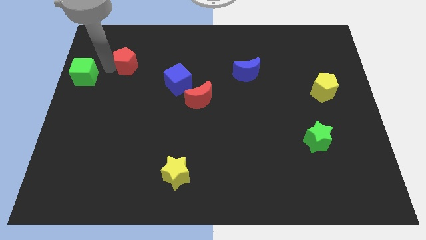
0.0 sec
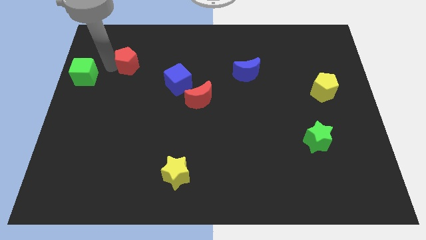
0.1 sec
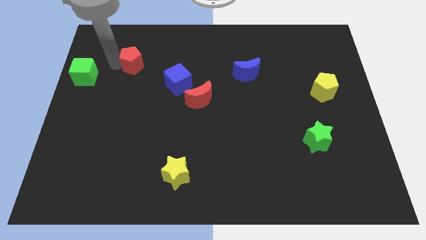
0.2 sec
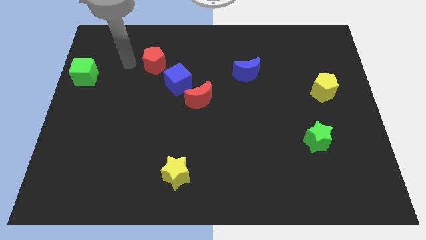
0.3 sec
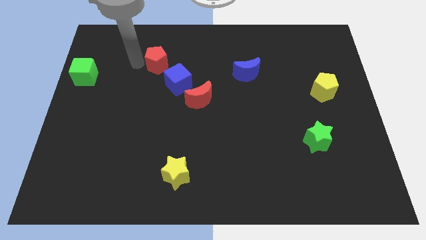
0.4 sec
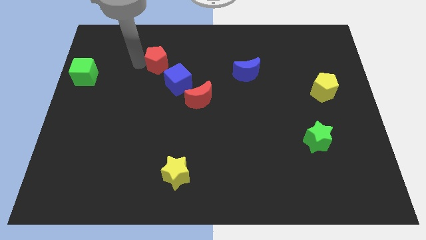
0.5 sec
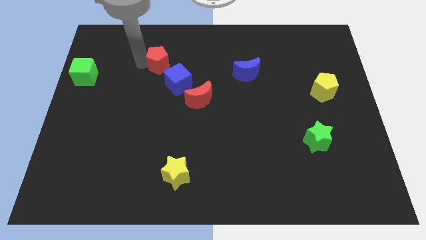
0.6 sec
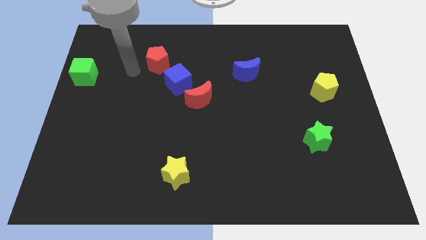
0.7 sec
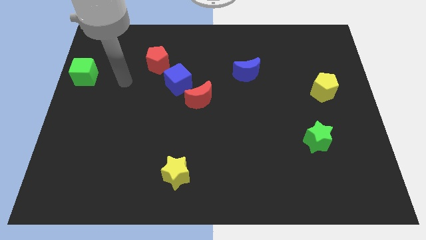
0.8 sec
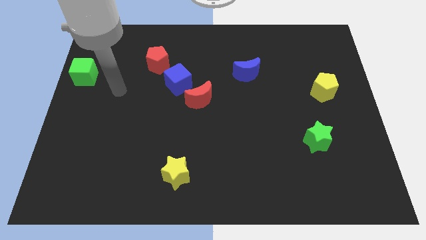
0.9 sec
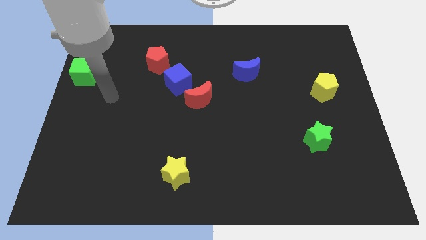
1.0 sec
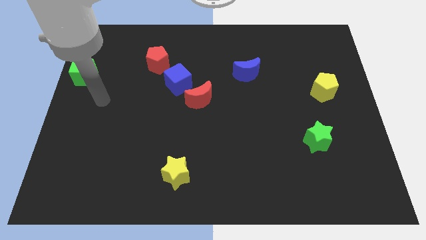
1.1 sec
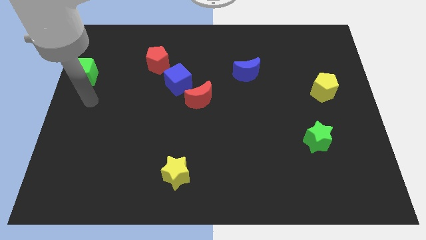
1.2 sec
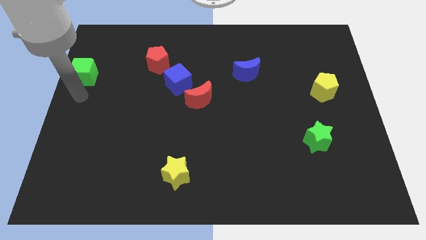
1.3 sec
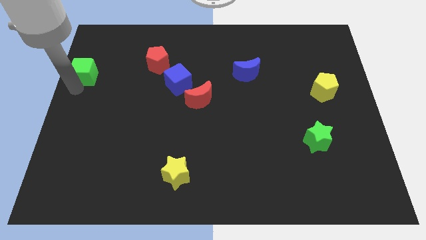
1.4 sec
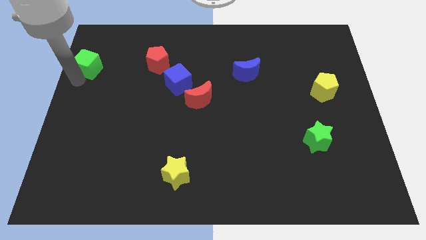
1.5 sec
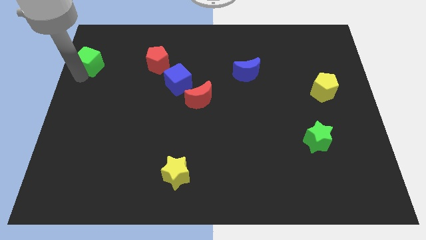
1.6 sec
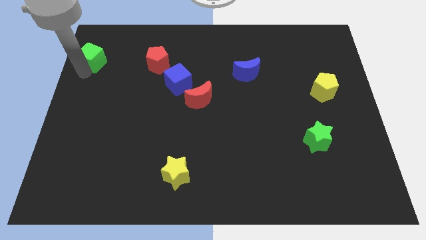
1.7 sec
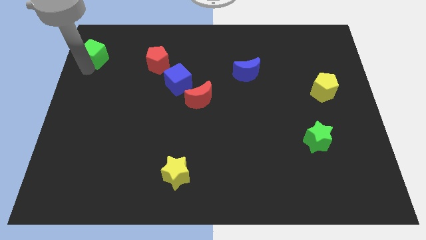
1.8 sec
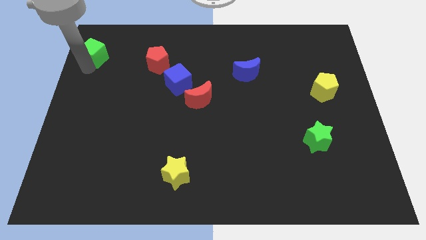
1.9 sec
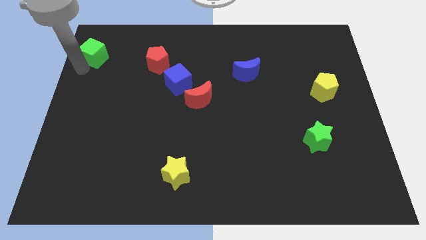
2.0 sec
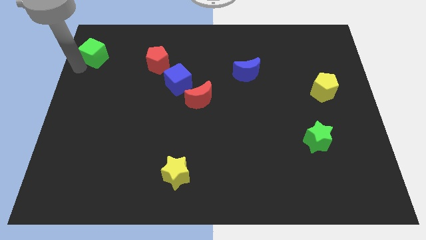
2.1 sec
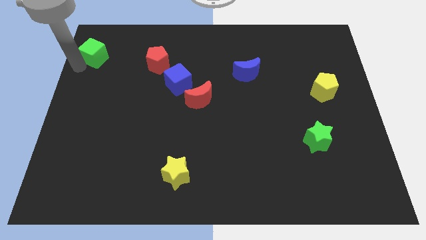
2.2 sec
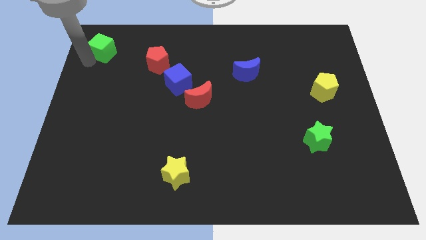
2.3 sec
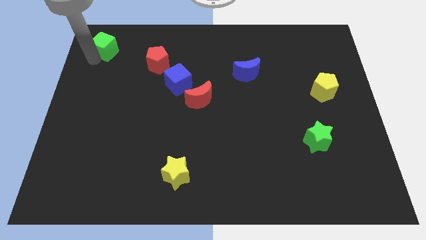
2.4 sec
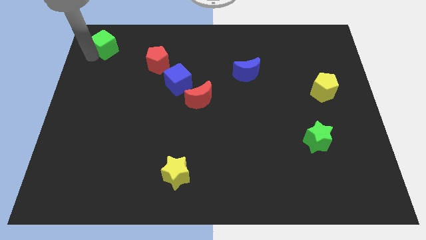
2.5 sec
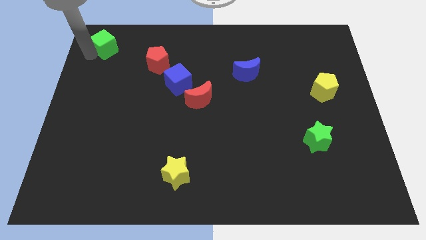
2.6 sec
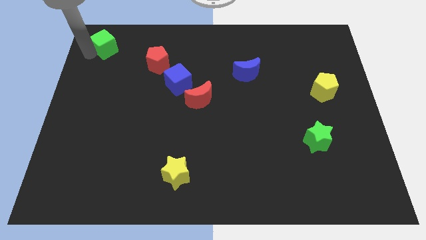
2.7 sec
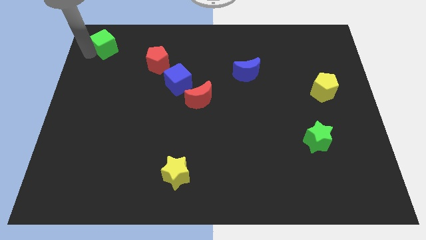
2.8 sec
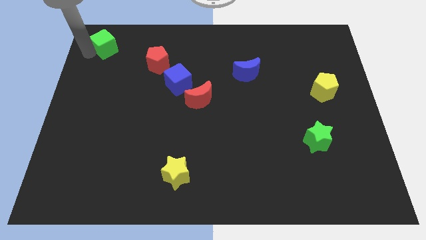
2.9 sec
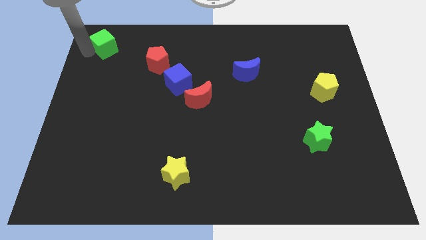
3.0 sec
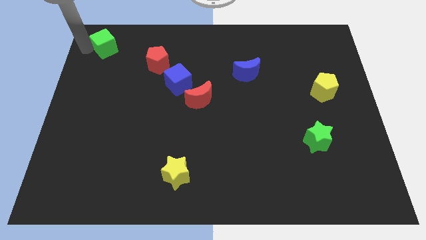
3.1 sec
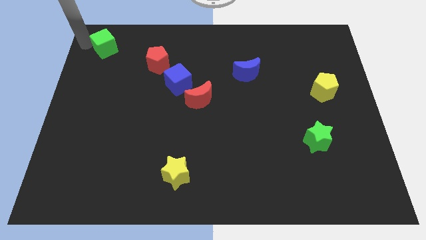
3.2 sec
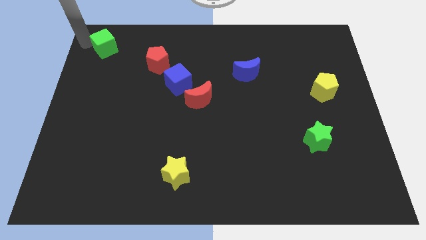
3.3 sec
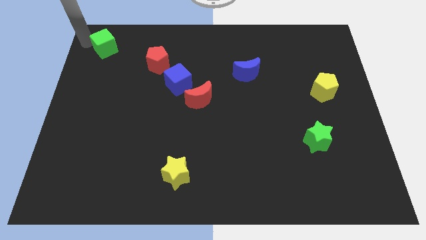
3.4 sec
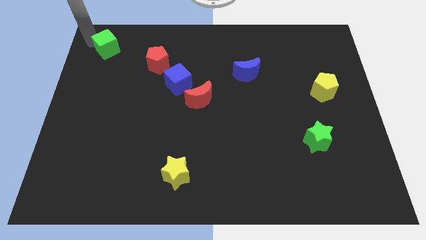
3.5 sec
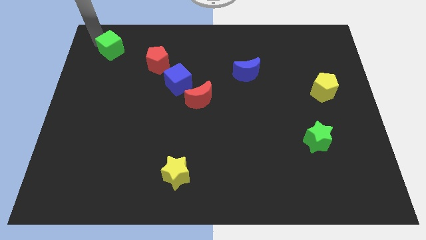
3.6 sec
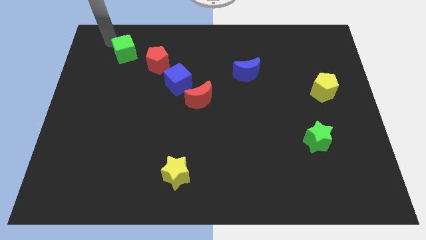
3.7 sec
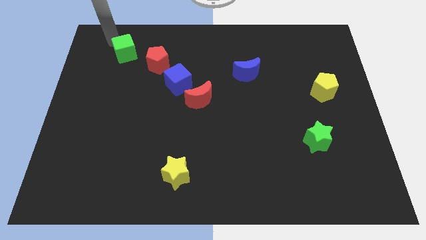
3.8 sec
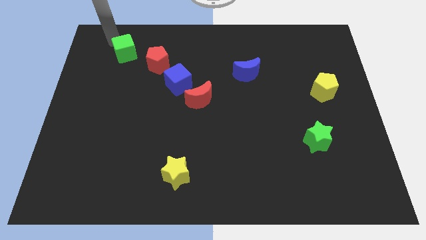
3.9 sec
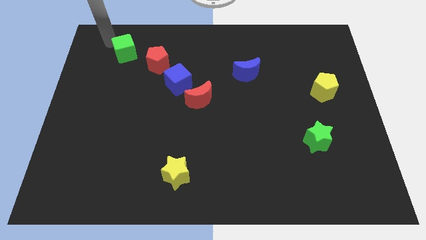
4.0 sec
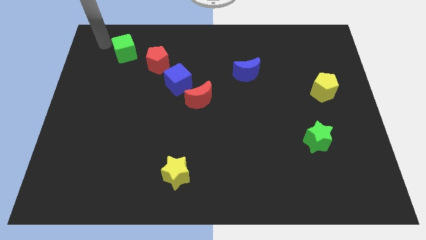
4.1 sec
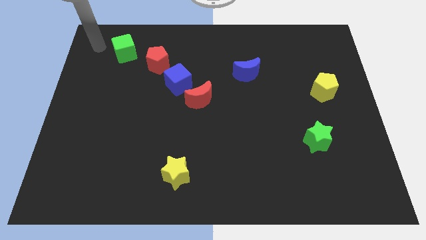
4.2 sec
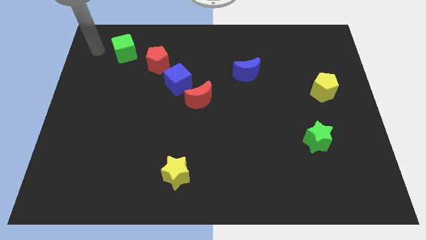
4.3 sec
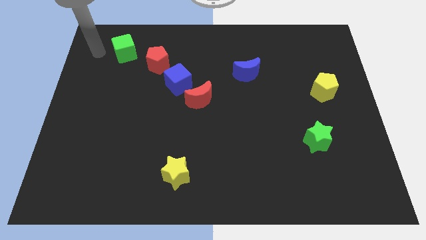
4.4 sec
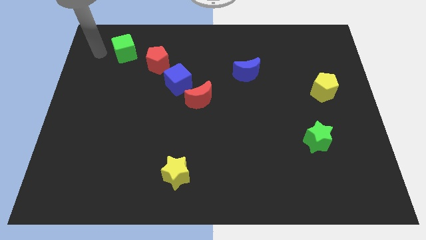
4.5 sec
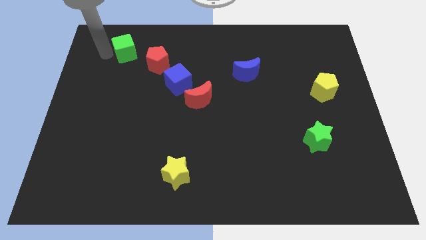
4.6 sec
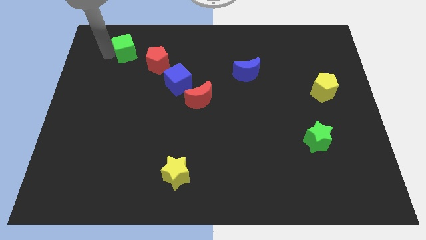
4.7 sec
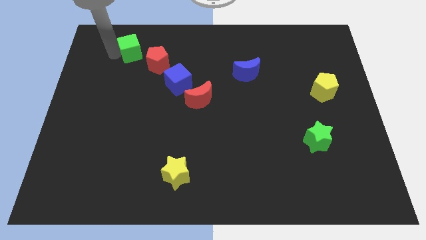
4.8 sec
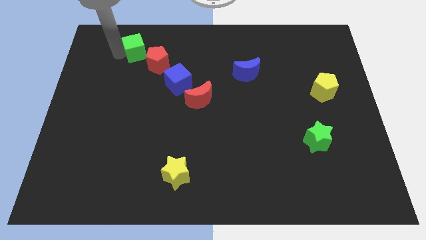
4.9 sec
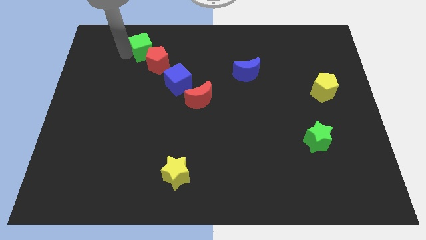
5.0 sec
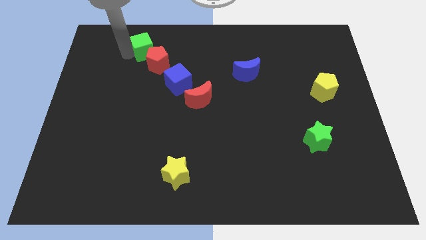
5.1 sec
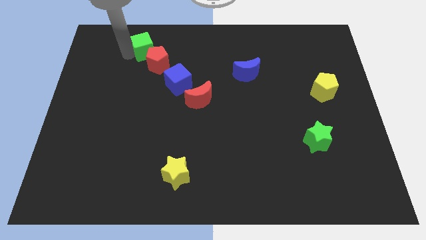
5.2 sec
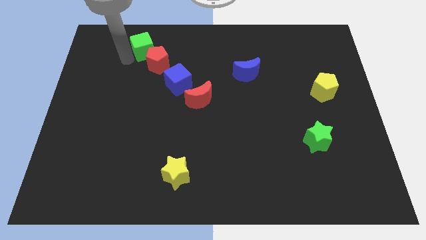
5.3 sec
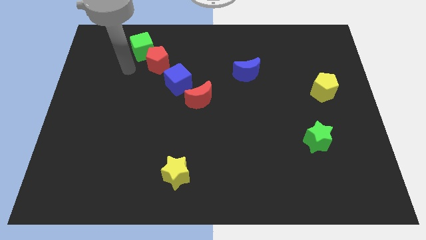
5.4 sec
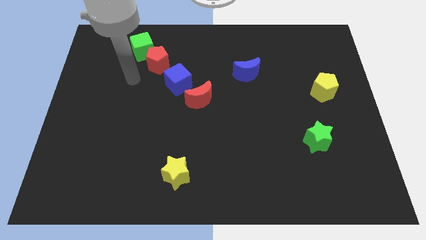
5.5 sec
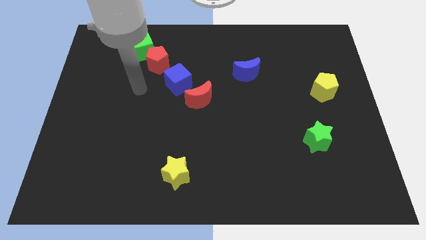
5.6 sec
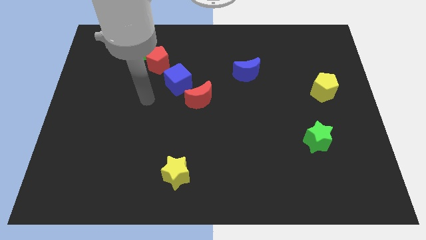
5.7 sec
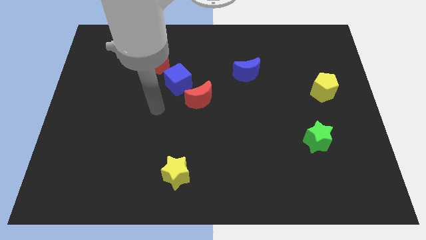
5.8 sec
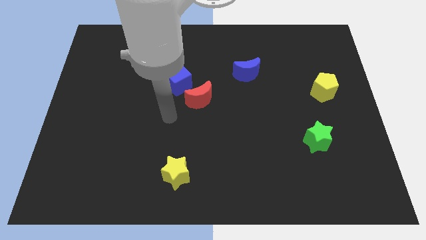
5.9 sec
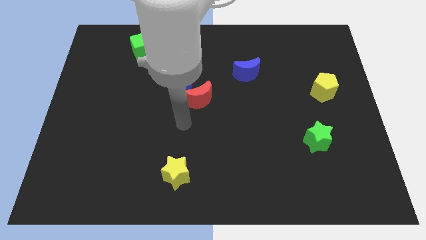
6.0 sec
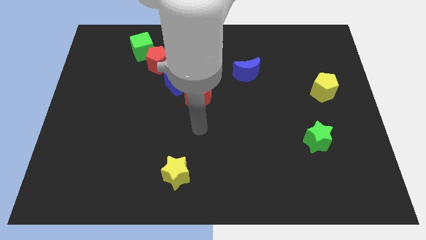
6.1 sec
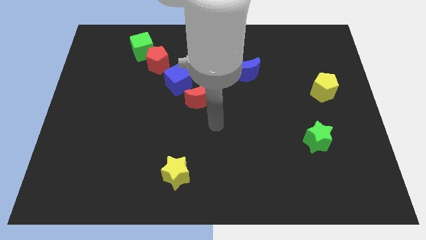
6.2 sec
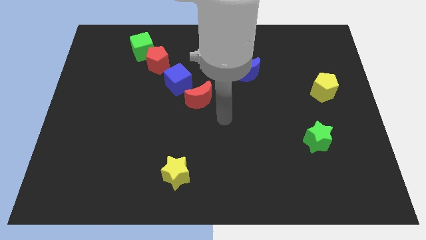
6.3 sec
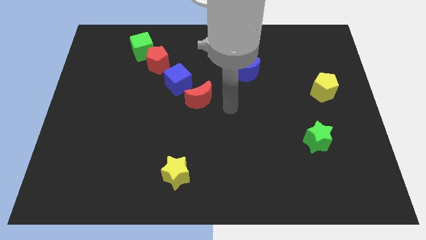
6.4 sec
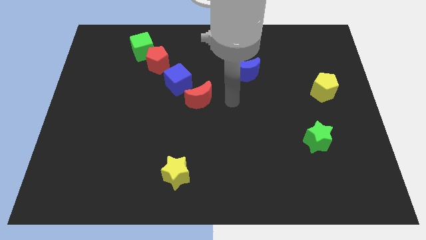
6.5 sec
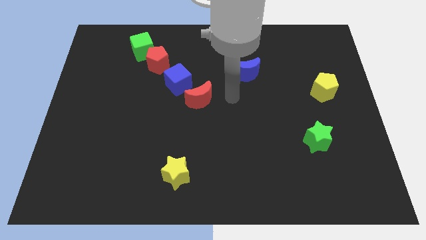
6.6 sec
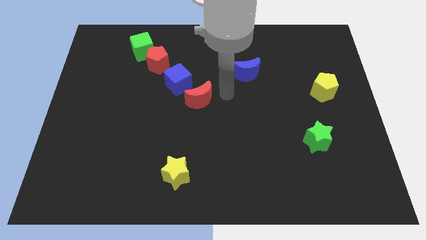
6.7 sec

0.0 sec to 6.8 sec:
place your arm in between the red crescent and the blue crescent

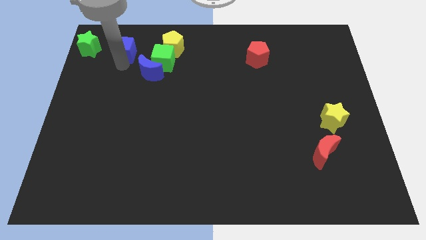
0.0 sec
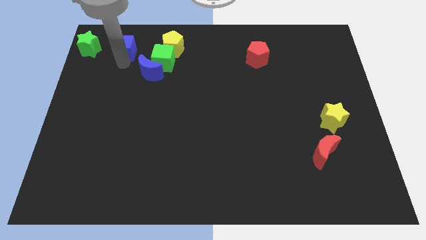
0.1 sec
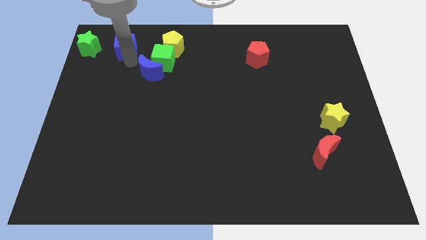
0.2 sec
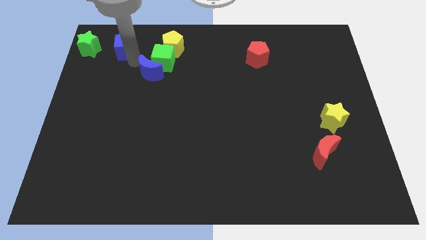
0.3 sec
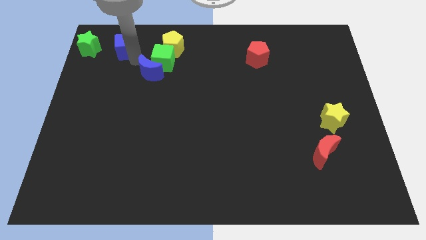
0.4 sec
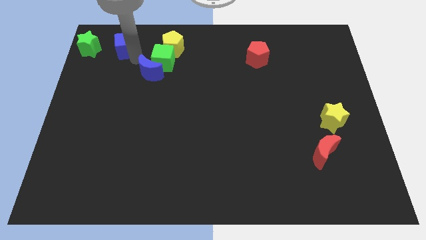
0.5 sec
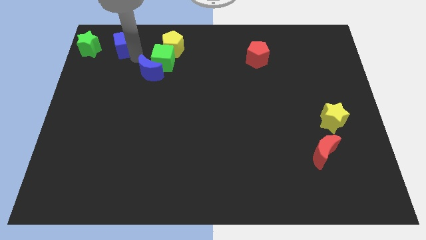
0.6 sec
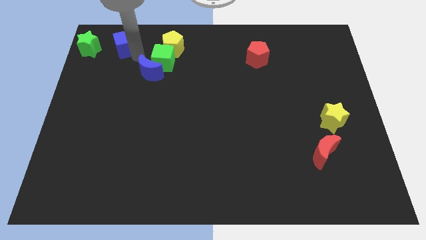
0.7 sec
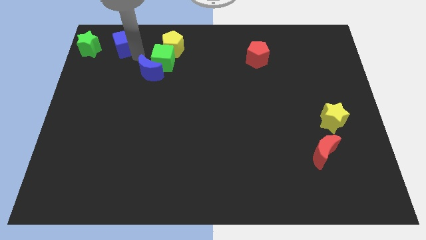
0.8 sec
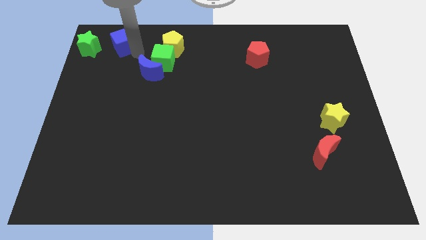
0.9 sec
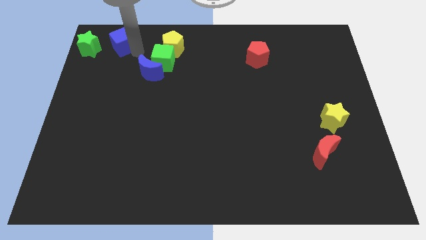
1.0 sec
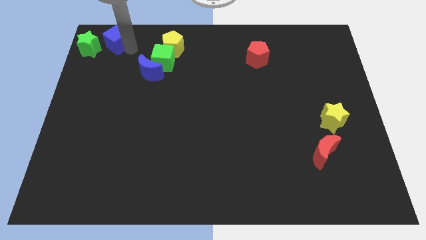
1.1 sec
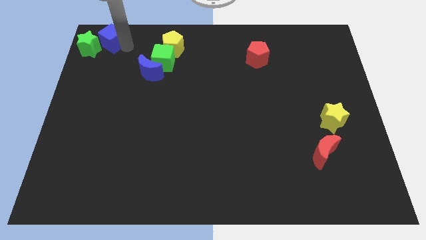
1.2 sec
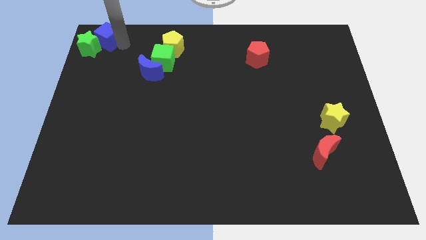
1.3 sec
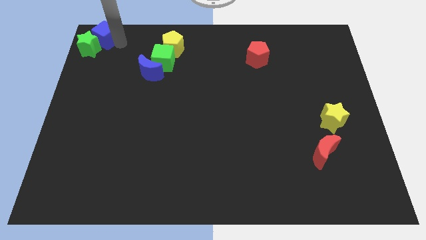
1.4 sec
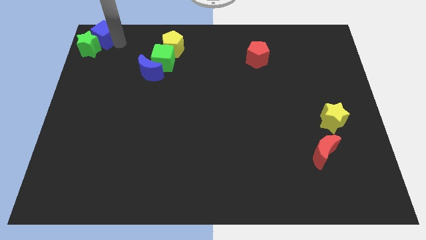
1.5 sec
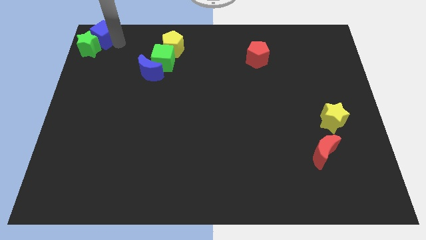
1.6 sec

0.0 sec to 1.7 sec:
place blue cube to the left corner of the board

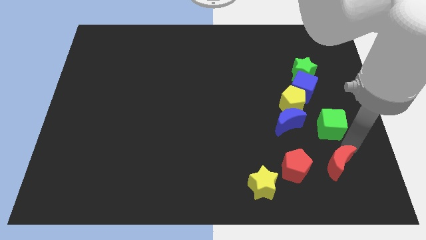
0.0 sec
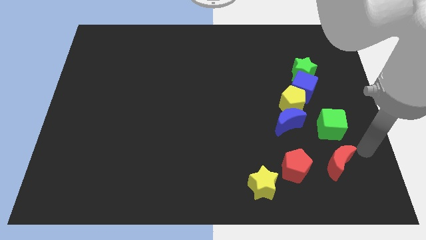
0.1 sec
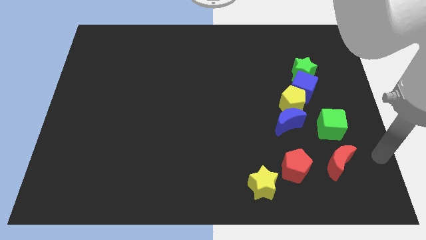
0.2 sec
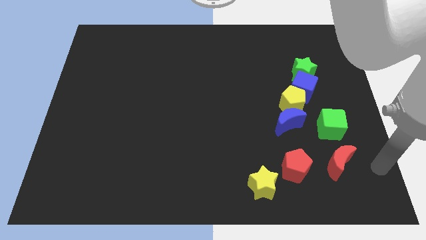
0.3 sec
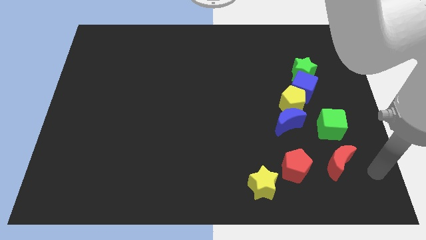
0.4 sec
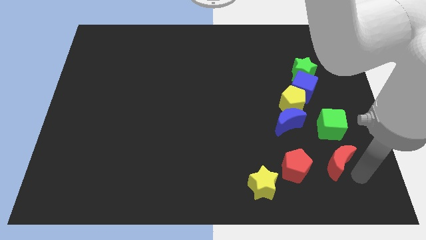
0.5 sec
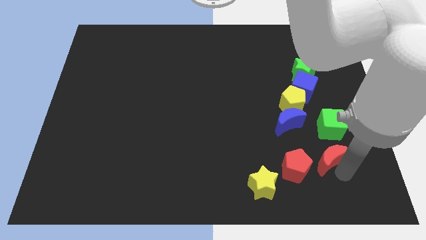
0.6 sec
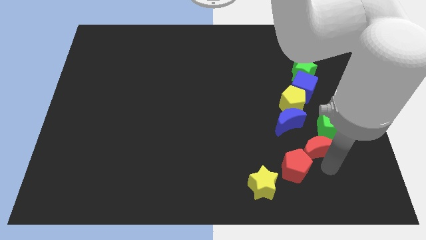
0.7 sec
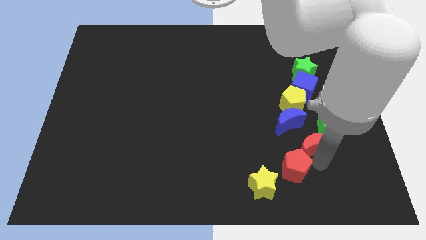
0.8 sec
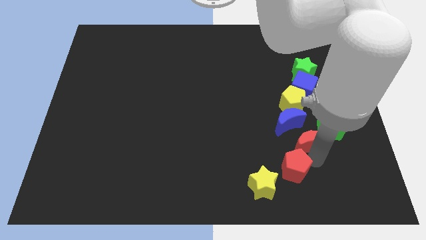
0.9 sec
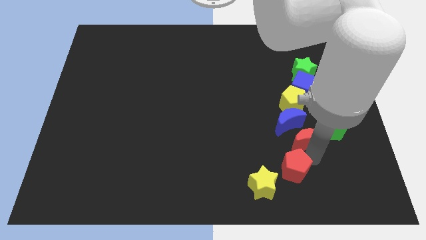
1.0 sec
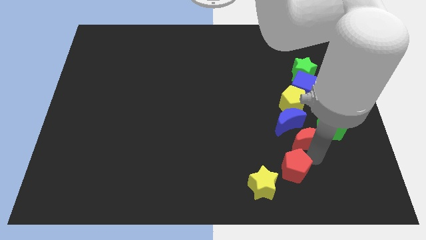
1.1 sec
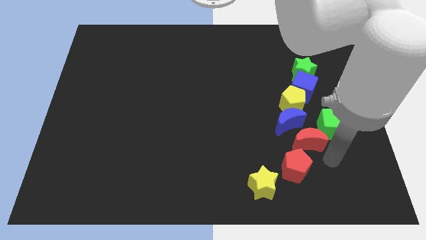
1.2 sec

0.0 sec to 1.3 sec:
push the red crescent to the top right of the red pentagon
